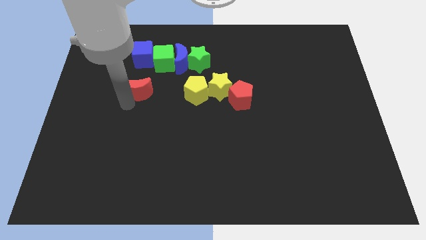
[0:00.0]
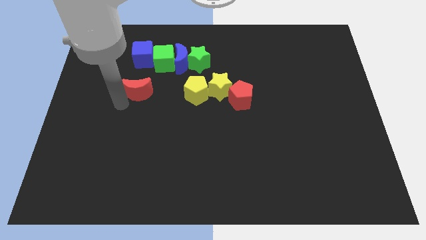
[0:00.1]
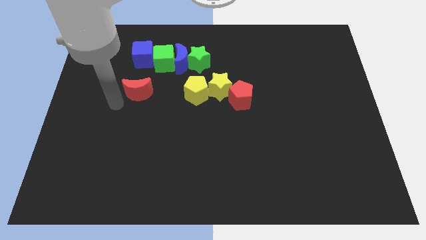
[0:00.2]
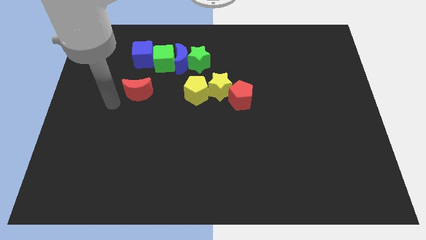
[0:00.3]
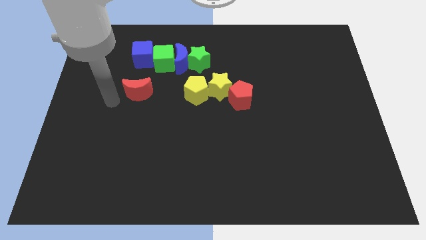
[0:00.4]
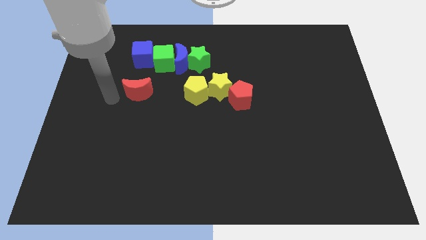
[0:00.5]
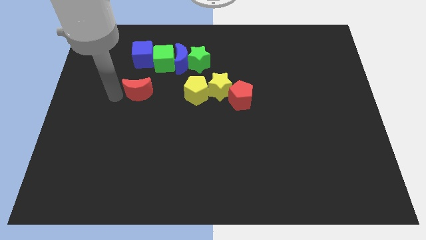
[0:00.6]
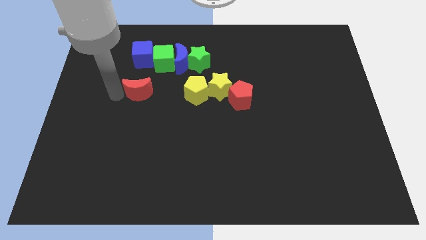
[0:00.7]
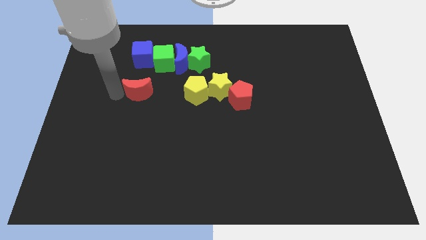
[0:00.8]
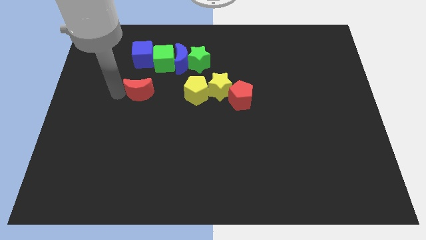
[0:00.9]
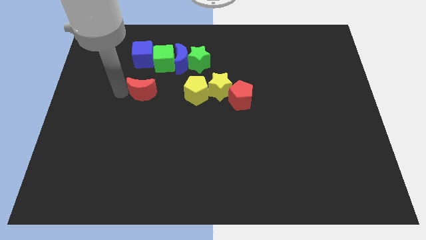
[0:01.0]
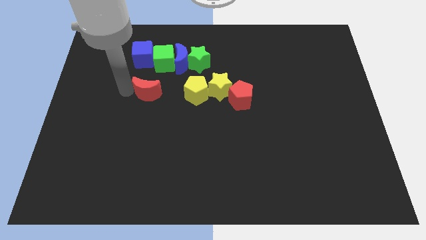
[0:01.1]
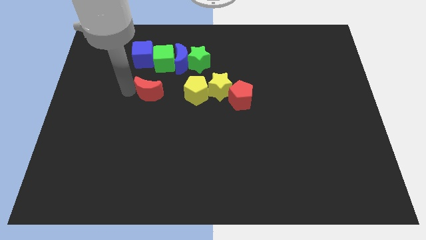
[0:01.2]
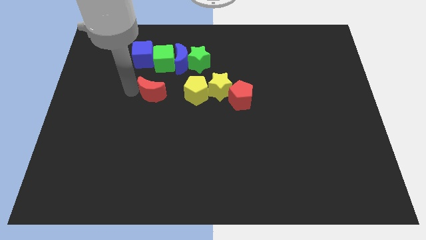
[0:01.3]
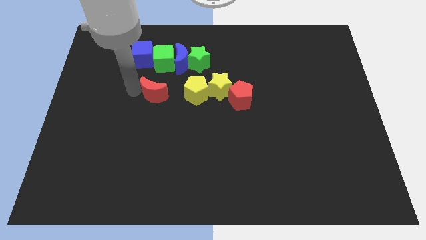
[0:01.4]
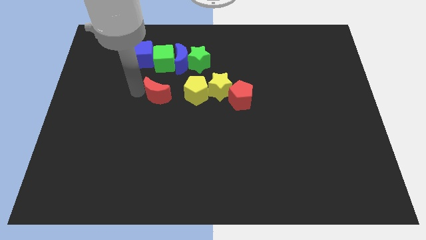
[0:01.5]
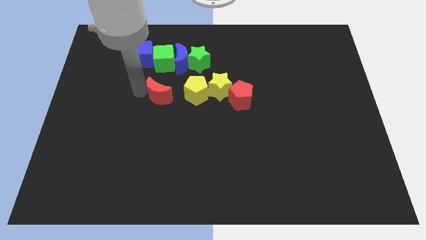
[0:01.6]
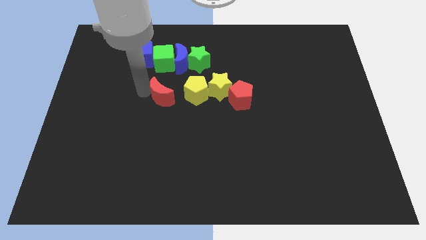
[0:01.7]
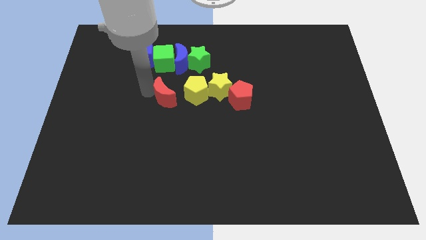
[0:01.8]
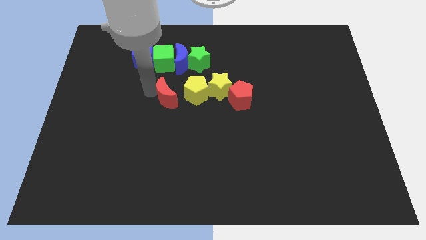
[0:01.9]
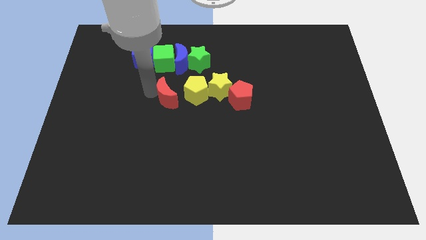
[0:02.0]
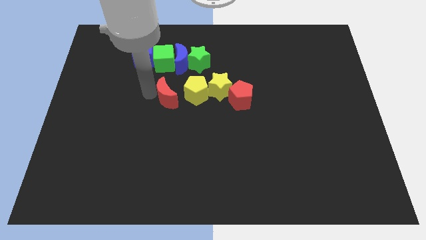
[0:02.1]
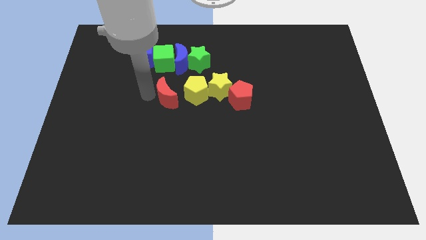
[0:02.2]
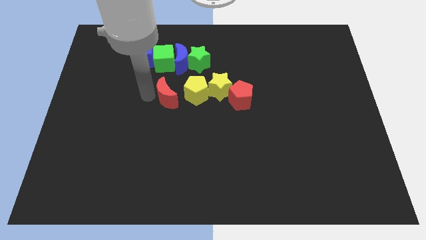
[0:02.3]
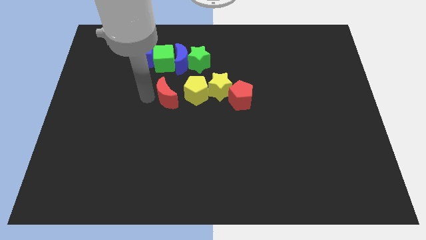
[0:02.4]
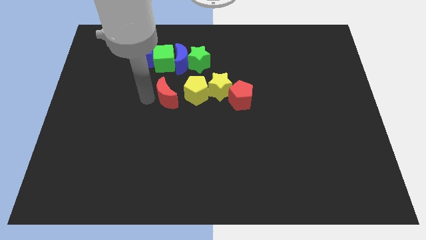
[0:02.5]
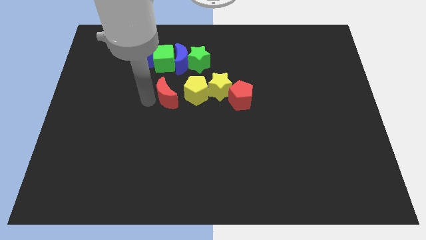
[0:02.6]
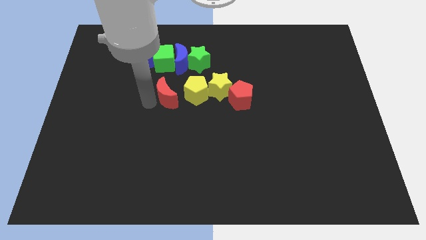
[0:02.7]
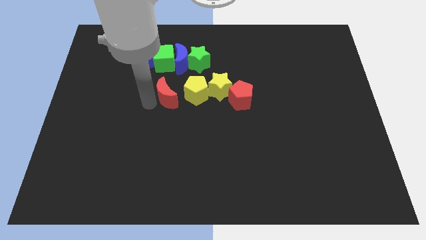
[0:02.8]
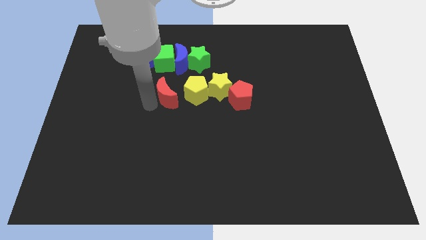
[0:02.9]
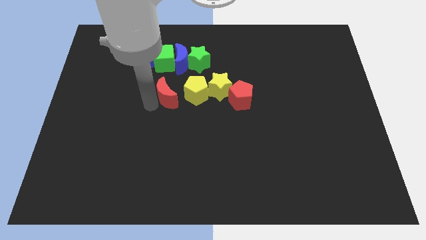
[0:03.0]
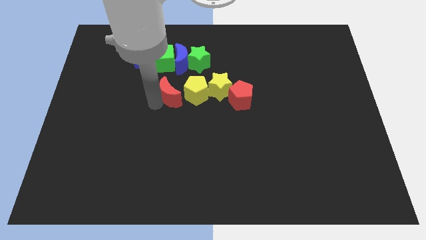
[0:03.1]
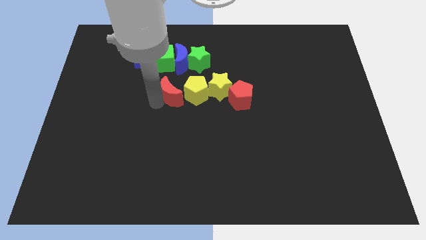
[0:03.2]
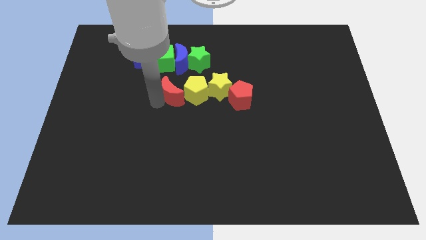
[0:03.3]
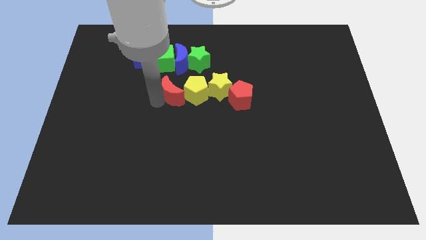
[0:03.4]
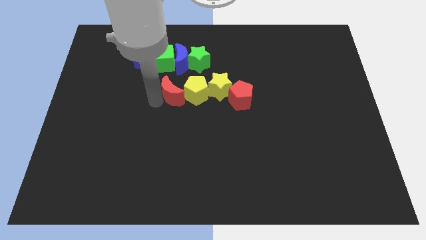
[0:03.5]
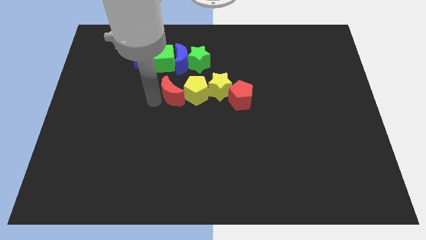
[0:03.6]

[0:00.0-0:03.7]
place the red moon left to the yellow pentagon

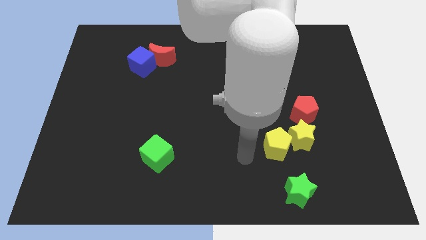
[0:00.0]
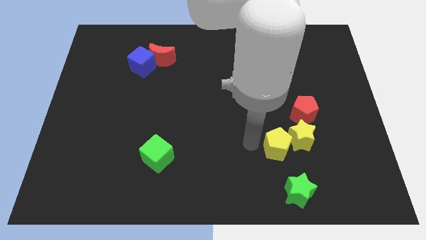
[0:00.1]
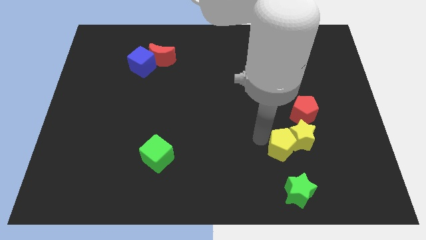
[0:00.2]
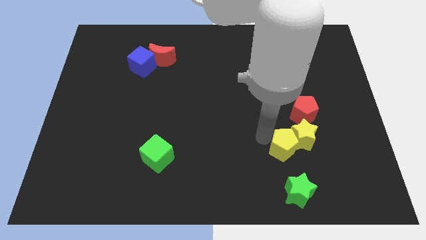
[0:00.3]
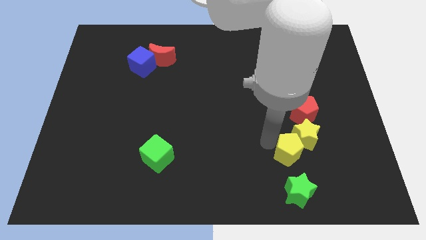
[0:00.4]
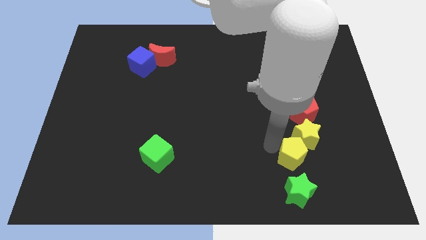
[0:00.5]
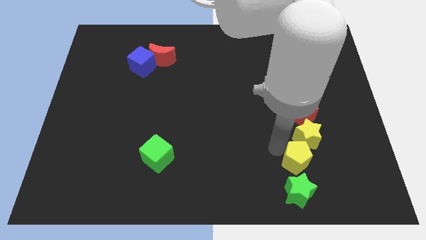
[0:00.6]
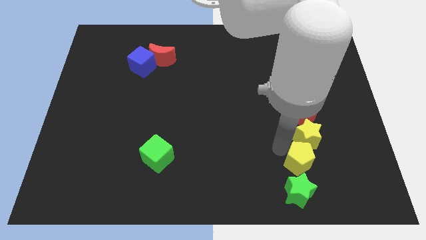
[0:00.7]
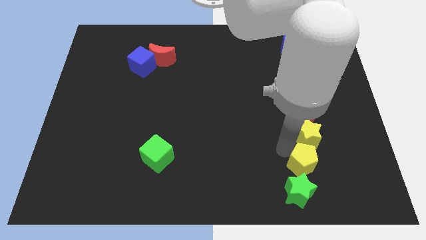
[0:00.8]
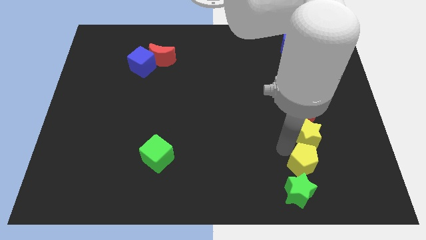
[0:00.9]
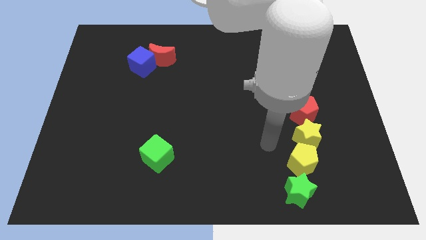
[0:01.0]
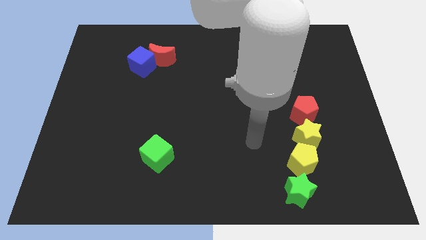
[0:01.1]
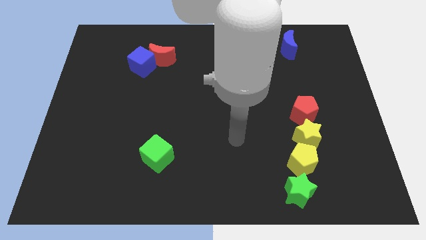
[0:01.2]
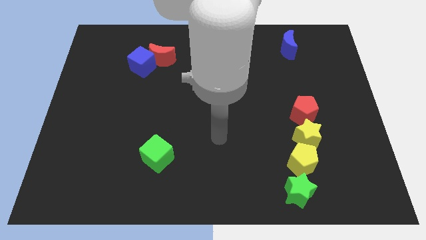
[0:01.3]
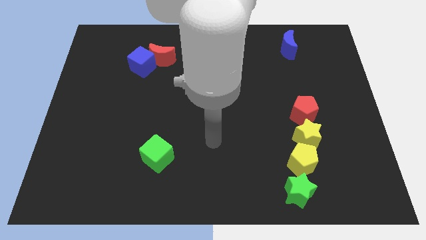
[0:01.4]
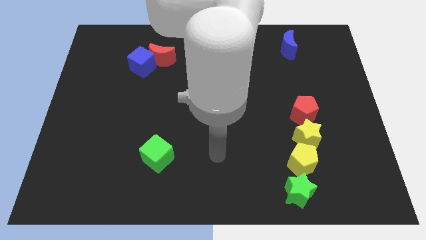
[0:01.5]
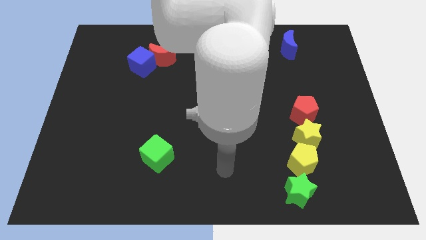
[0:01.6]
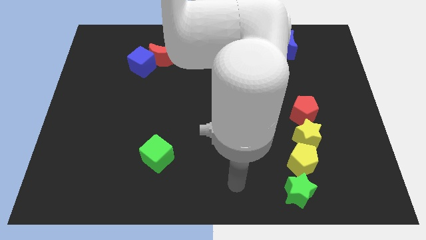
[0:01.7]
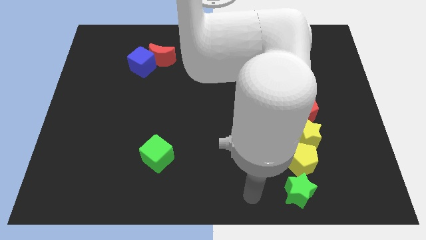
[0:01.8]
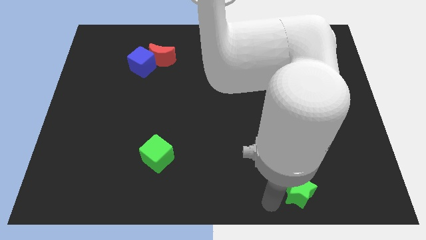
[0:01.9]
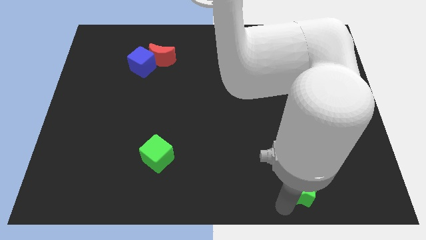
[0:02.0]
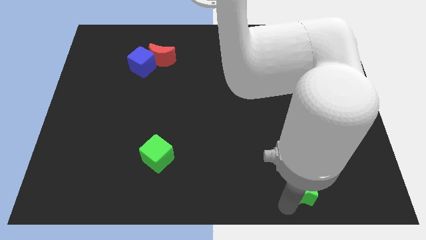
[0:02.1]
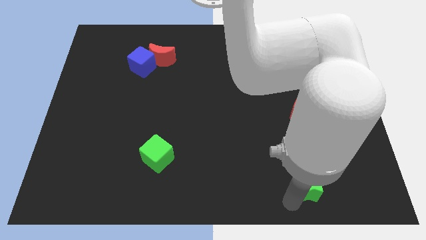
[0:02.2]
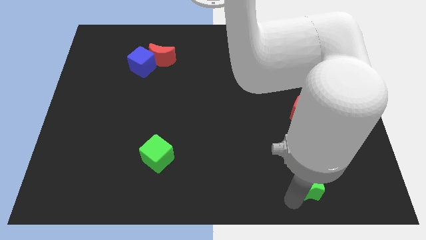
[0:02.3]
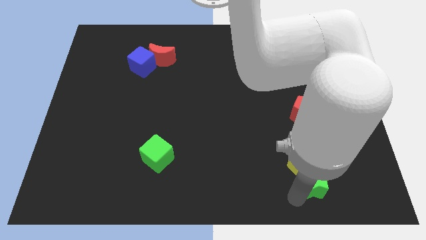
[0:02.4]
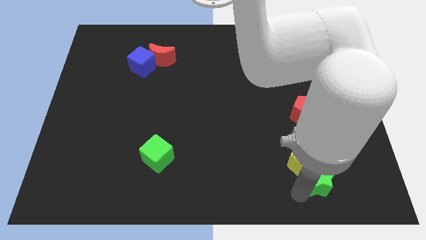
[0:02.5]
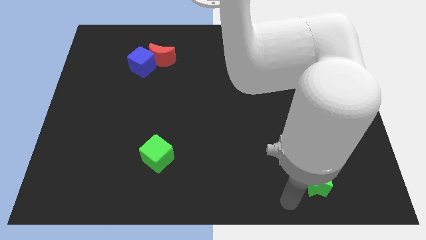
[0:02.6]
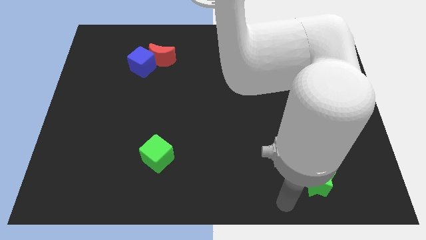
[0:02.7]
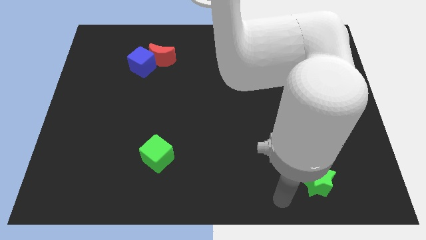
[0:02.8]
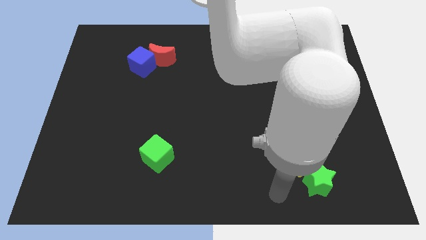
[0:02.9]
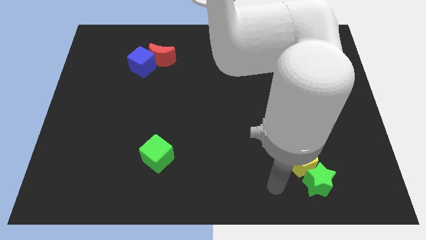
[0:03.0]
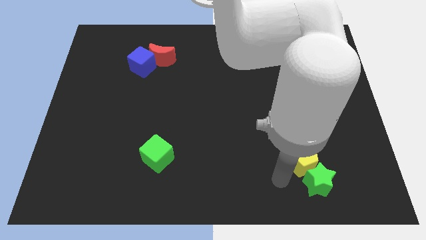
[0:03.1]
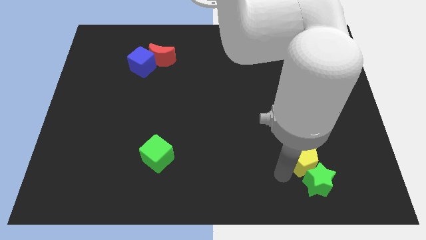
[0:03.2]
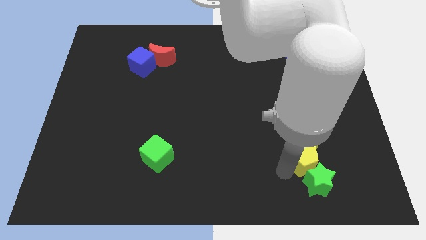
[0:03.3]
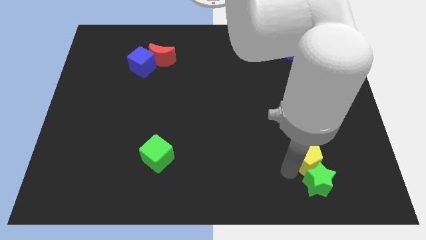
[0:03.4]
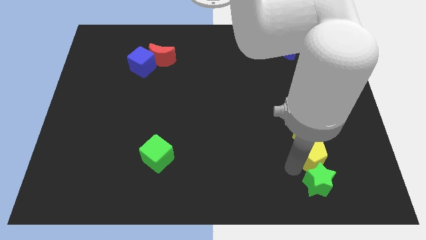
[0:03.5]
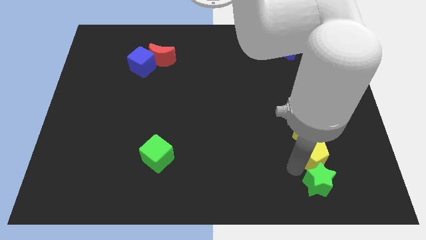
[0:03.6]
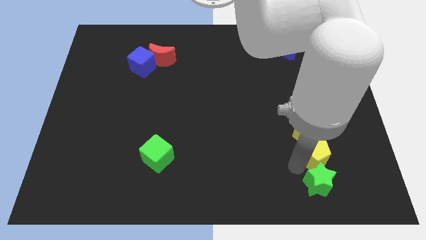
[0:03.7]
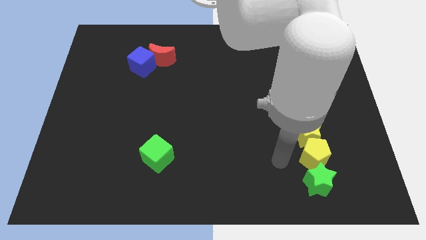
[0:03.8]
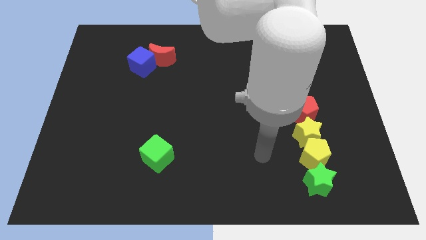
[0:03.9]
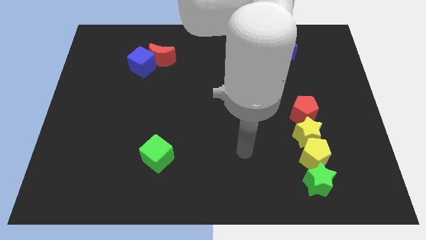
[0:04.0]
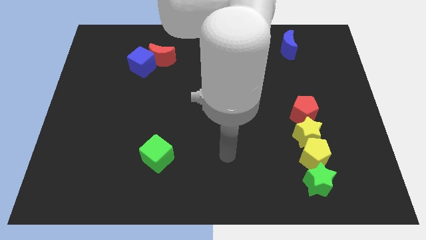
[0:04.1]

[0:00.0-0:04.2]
make a vertical line with the yellow blocks the green star and red pentagon

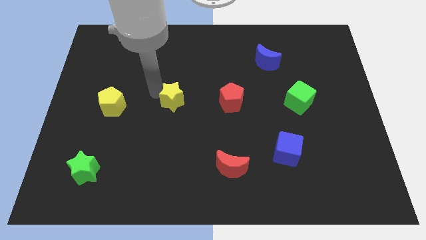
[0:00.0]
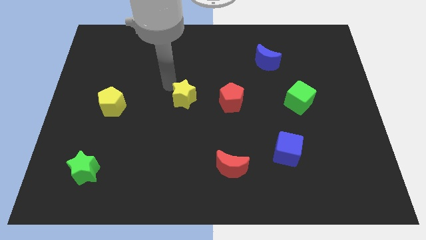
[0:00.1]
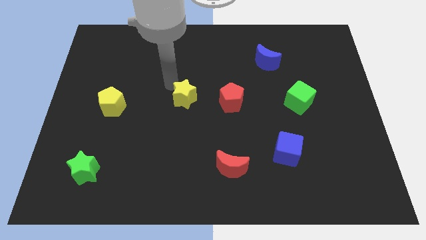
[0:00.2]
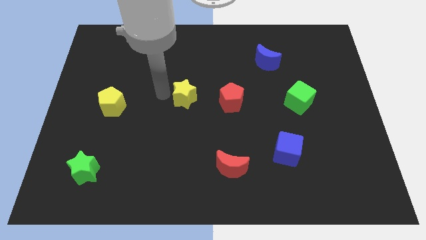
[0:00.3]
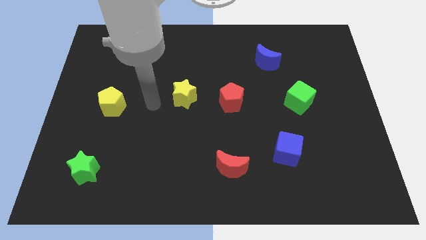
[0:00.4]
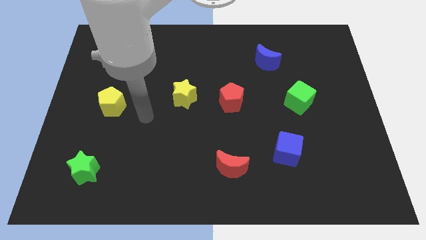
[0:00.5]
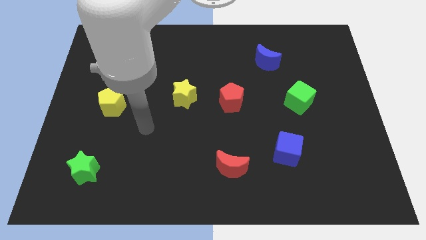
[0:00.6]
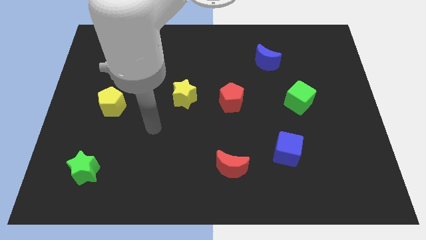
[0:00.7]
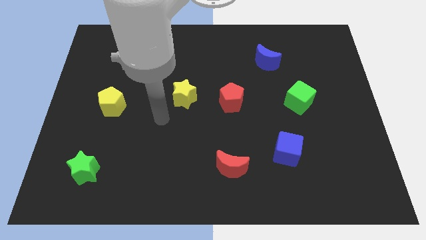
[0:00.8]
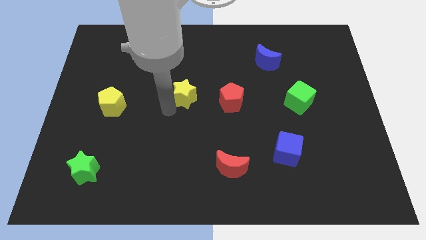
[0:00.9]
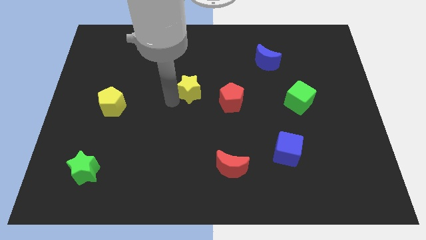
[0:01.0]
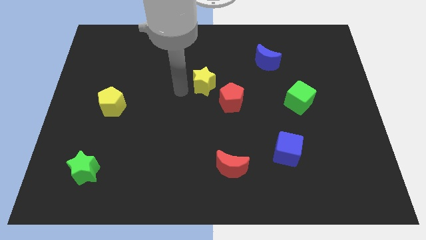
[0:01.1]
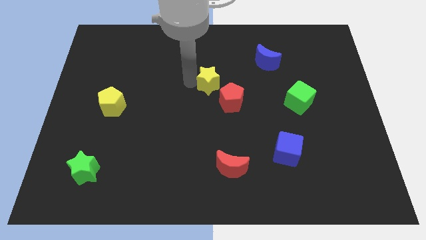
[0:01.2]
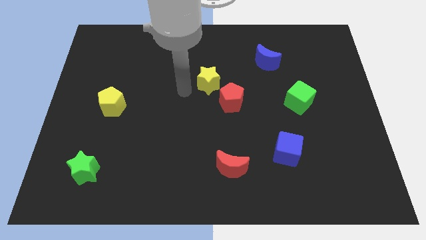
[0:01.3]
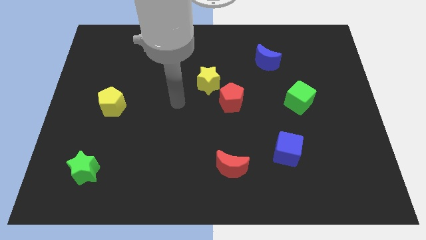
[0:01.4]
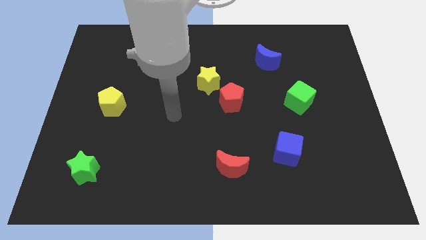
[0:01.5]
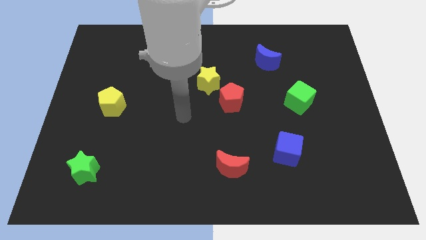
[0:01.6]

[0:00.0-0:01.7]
push the yellow star towards the top left side of the red pentagon
